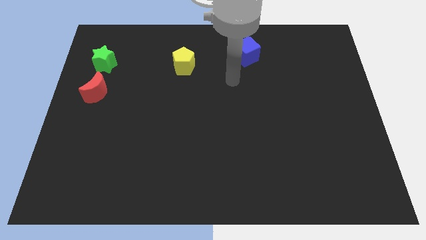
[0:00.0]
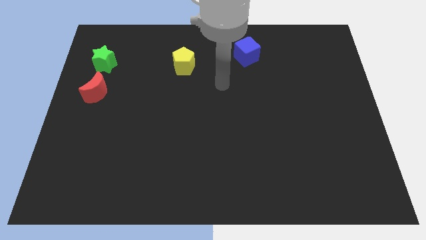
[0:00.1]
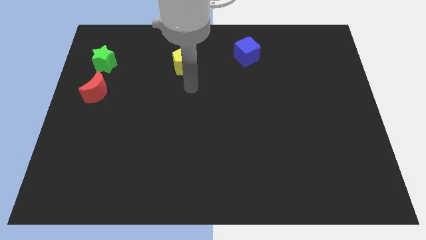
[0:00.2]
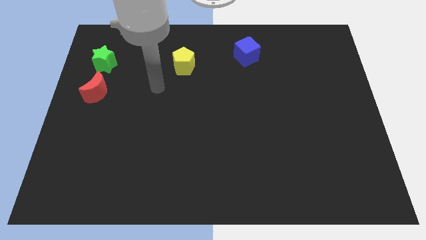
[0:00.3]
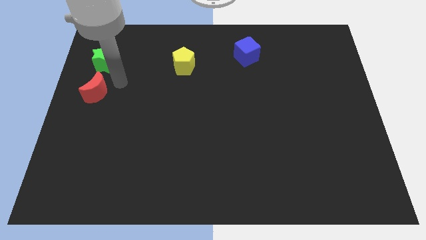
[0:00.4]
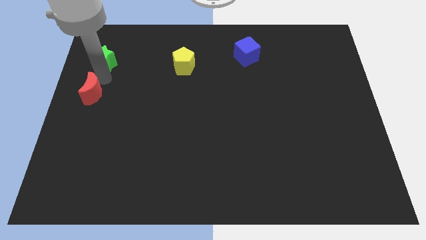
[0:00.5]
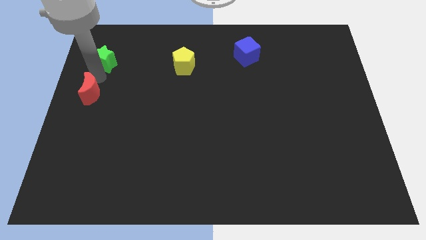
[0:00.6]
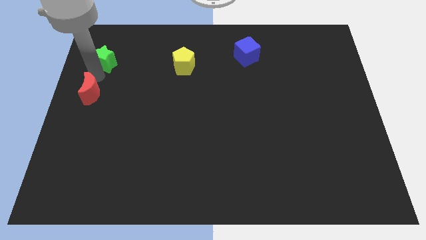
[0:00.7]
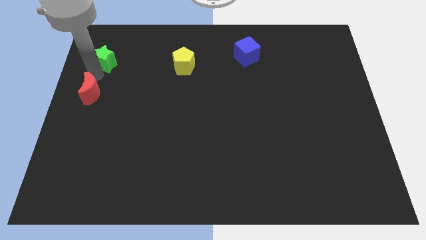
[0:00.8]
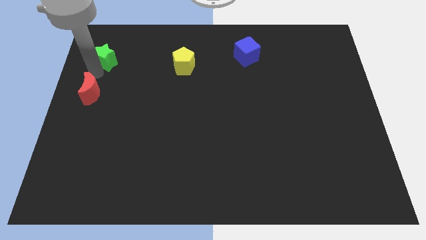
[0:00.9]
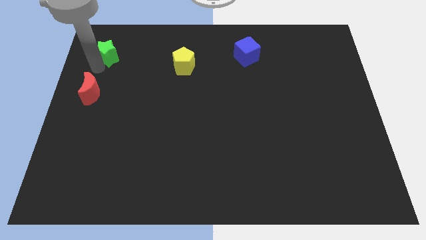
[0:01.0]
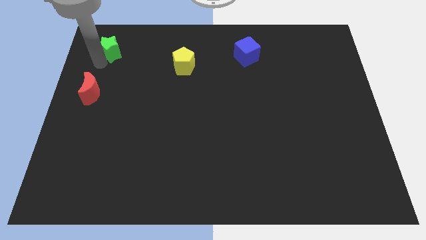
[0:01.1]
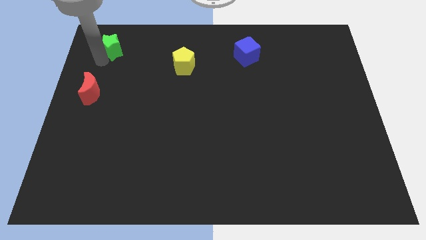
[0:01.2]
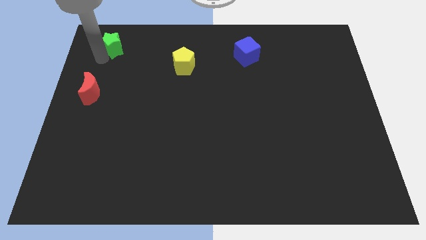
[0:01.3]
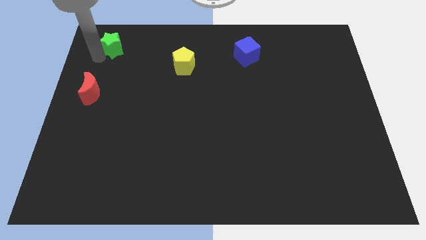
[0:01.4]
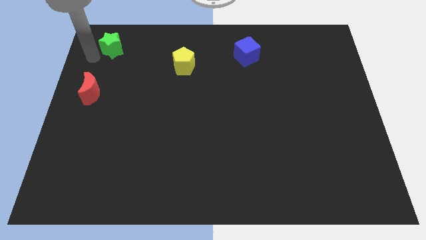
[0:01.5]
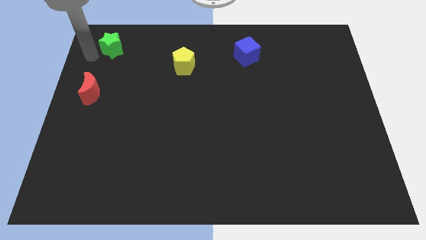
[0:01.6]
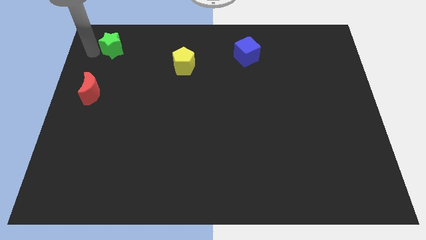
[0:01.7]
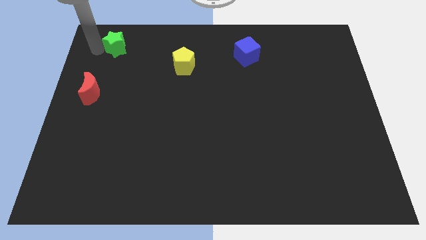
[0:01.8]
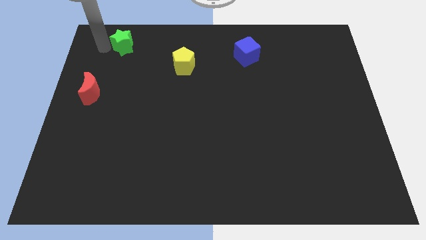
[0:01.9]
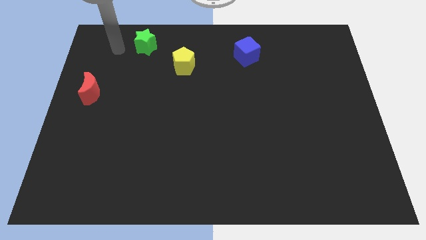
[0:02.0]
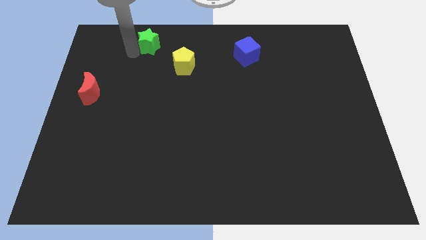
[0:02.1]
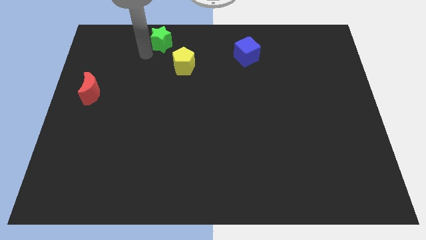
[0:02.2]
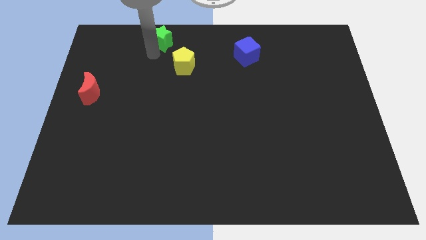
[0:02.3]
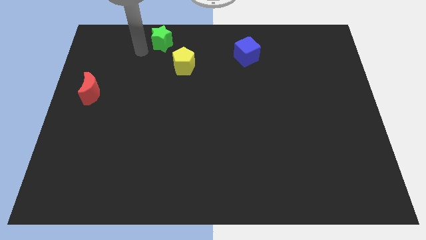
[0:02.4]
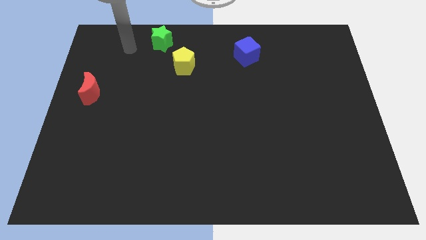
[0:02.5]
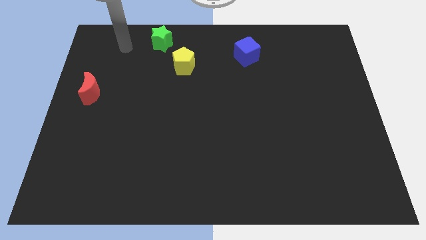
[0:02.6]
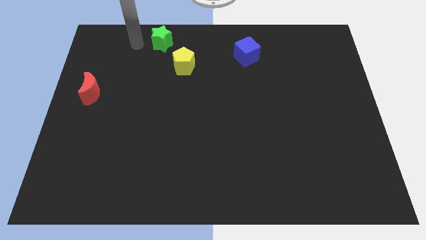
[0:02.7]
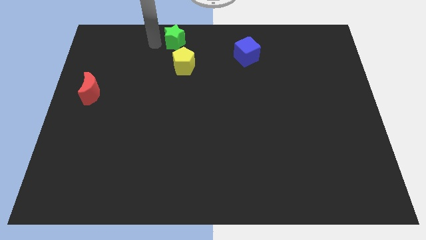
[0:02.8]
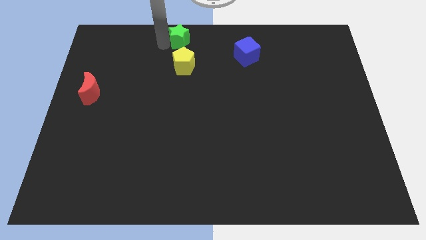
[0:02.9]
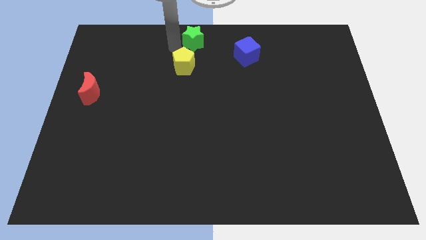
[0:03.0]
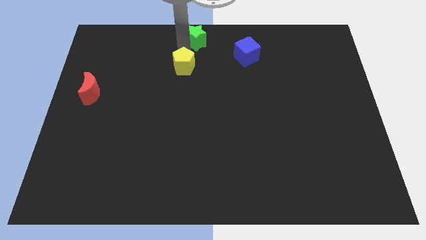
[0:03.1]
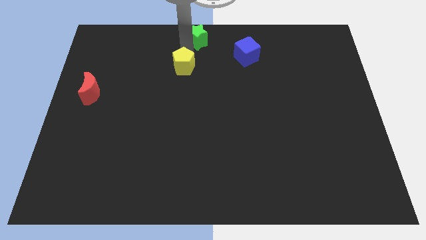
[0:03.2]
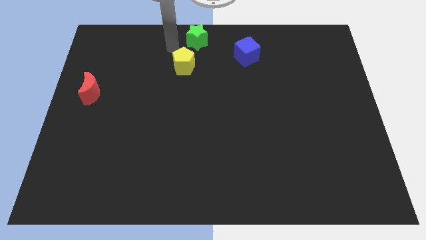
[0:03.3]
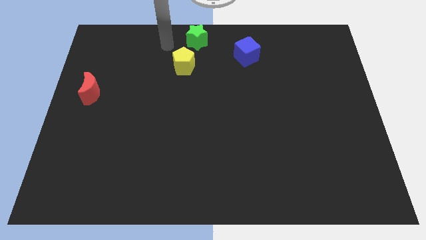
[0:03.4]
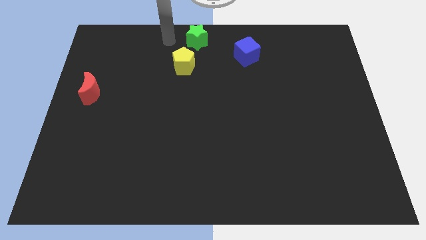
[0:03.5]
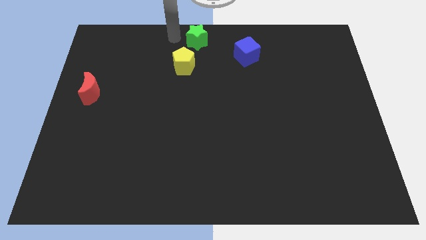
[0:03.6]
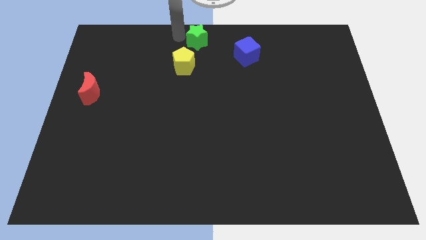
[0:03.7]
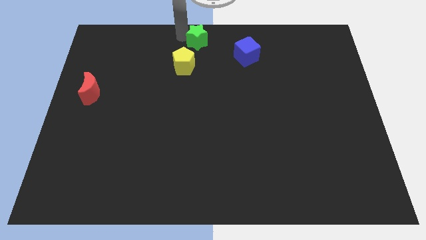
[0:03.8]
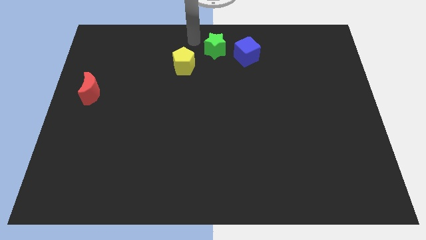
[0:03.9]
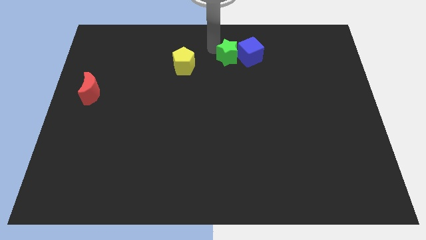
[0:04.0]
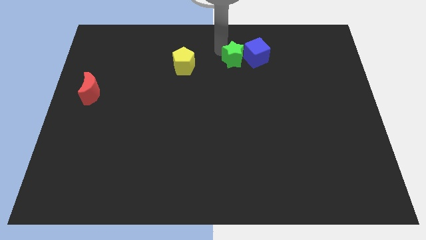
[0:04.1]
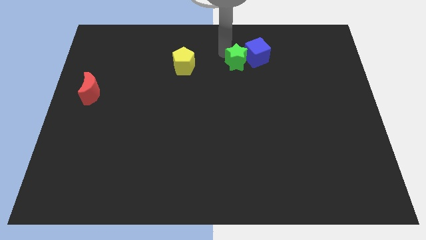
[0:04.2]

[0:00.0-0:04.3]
slide the green block next to the blue cube

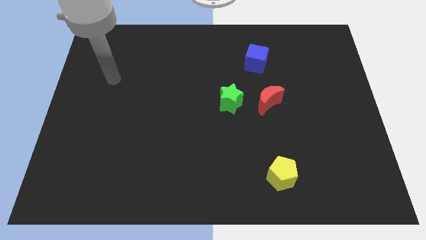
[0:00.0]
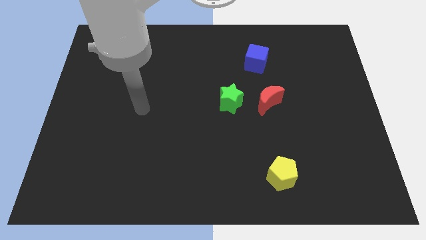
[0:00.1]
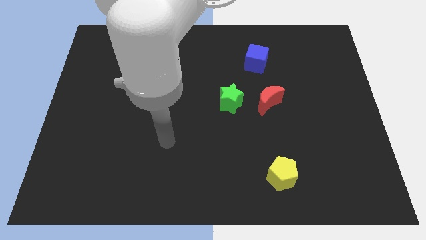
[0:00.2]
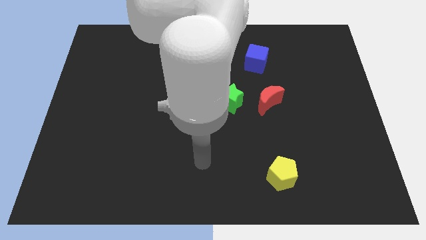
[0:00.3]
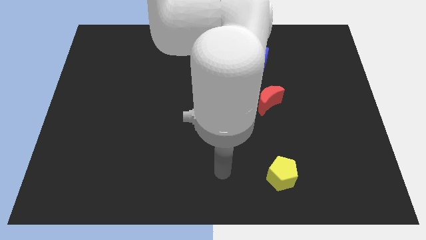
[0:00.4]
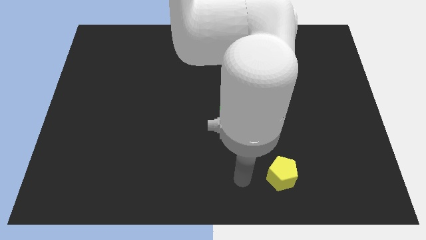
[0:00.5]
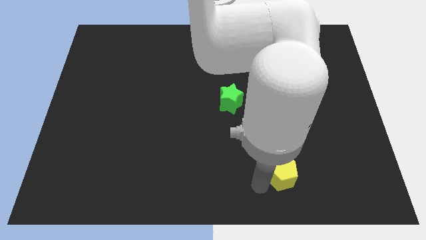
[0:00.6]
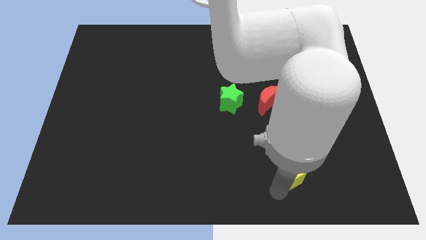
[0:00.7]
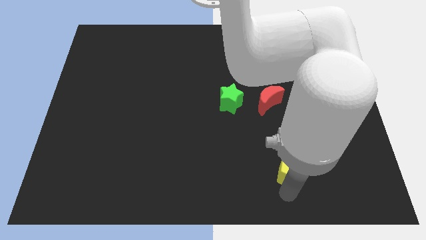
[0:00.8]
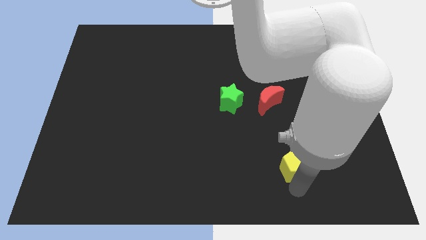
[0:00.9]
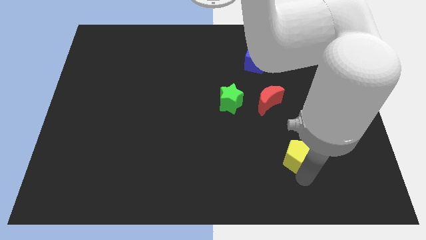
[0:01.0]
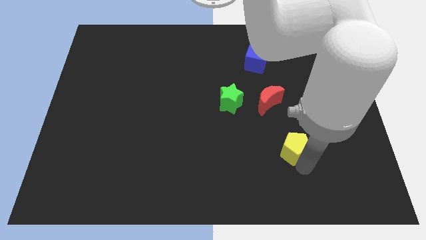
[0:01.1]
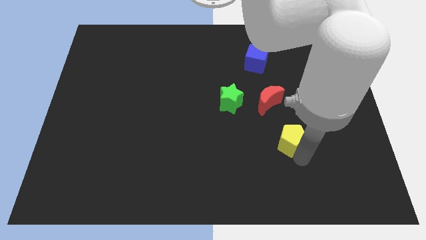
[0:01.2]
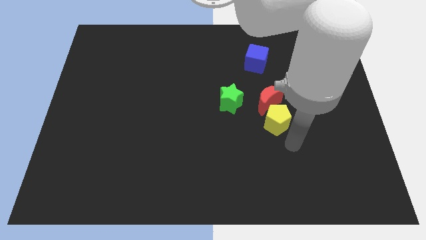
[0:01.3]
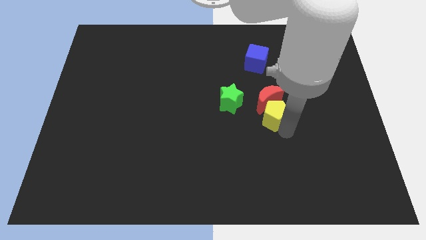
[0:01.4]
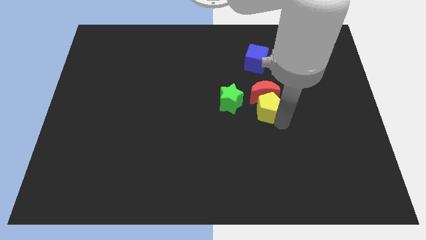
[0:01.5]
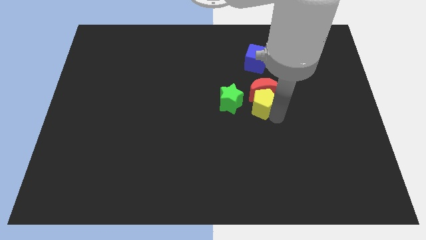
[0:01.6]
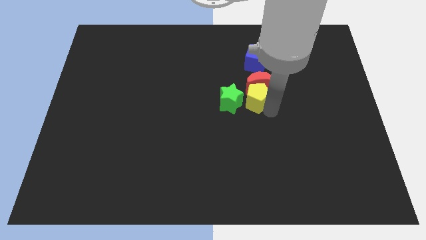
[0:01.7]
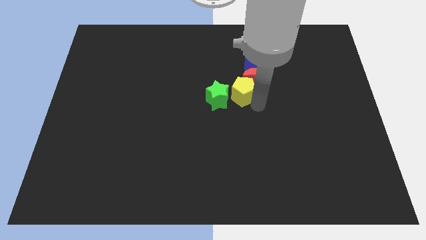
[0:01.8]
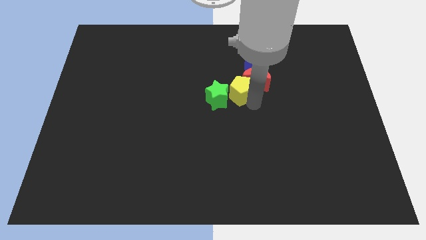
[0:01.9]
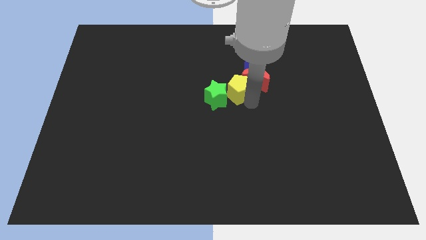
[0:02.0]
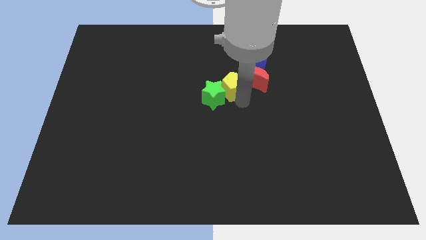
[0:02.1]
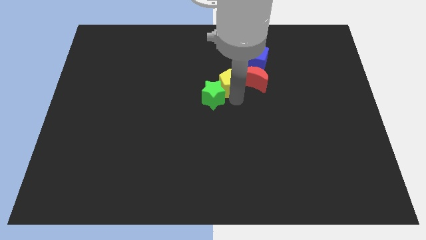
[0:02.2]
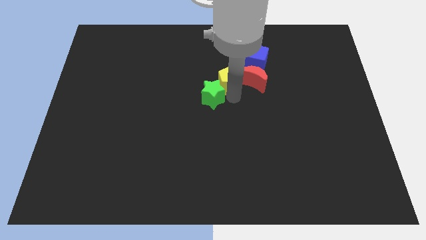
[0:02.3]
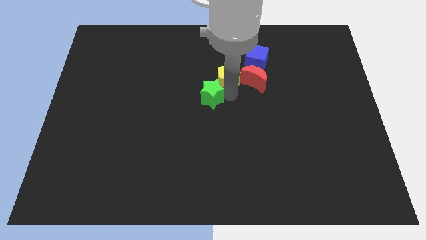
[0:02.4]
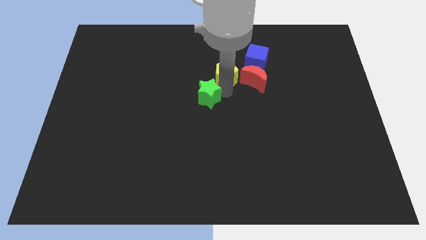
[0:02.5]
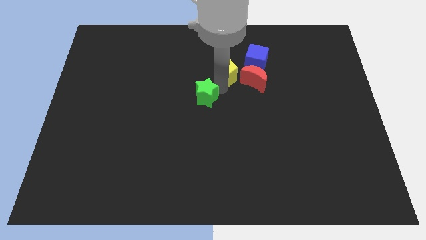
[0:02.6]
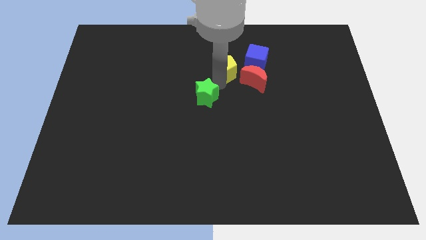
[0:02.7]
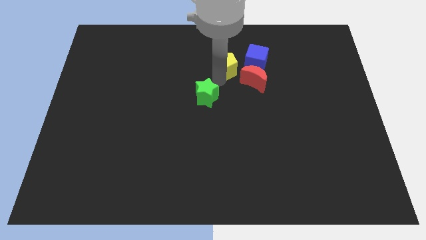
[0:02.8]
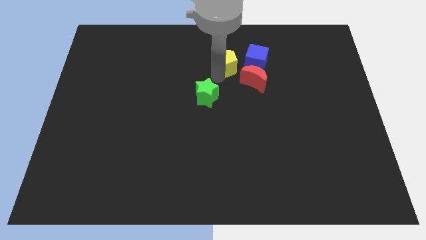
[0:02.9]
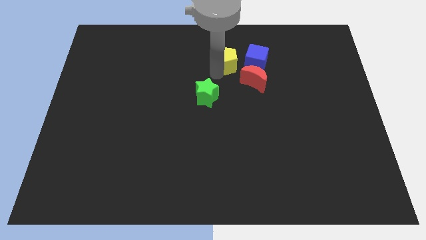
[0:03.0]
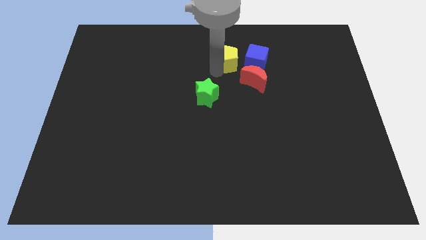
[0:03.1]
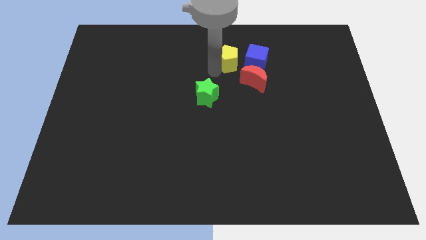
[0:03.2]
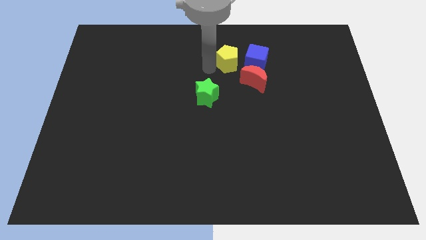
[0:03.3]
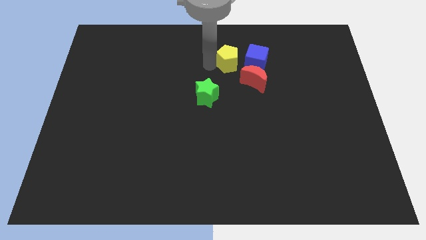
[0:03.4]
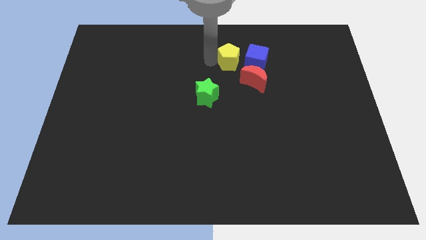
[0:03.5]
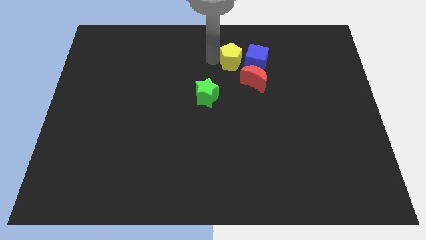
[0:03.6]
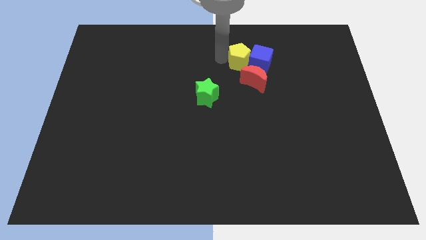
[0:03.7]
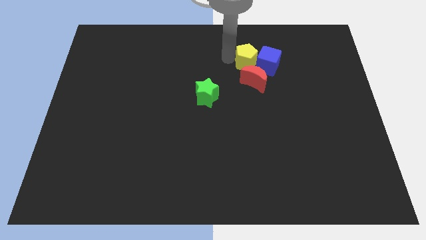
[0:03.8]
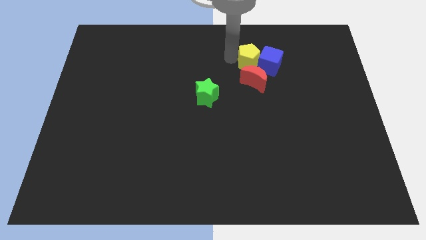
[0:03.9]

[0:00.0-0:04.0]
put the yellow block towards the blue block

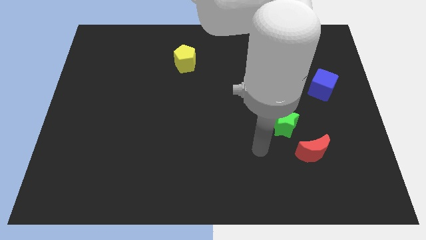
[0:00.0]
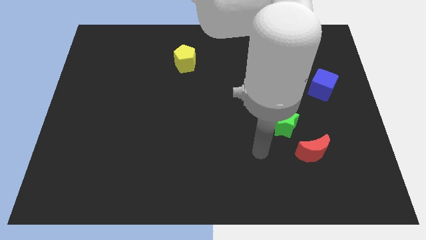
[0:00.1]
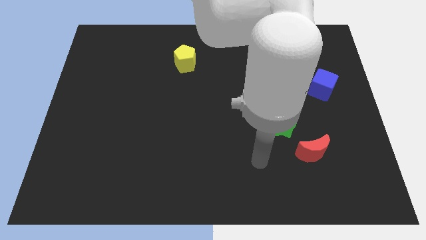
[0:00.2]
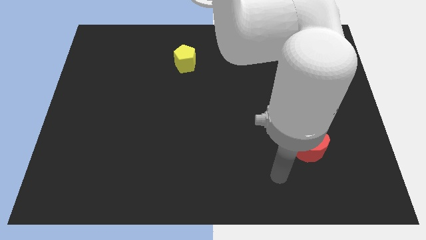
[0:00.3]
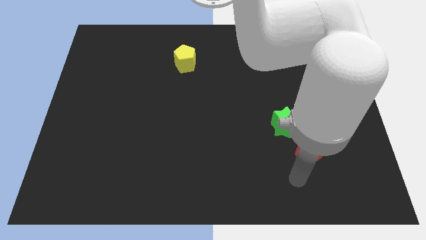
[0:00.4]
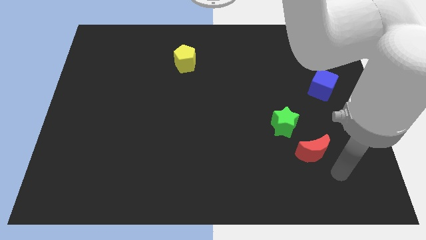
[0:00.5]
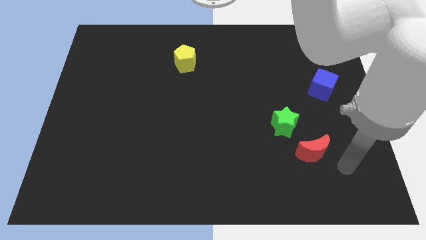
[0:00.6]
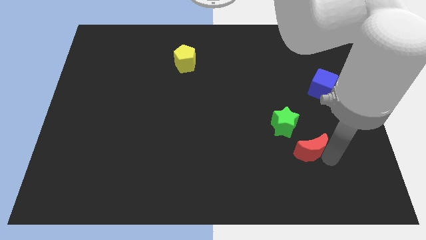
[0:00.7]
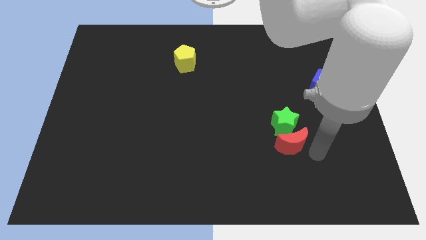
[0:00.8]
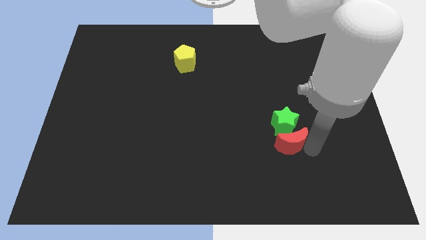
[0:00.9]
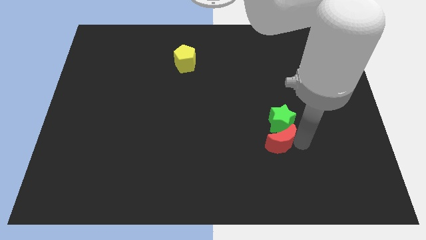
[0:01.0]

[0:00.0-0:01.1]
move the red moon close to the green star
